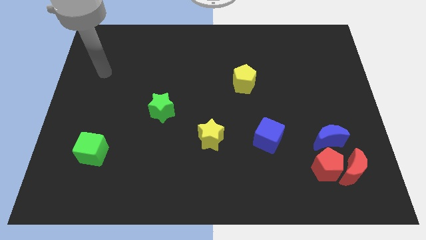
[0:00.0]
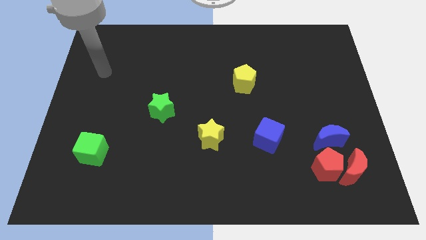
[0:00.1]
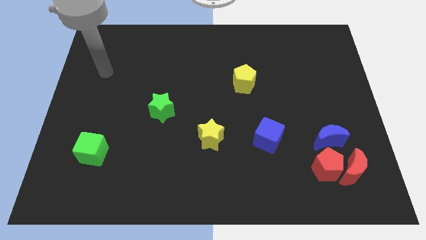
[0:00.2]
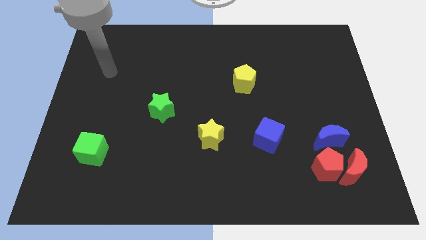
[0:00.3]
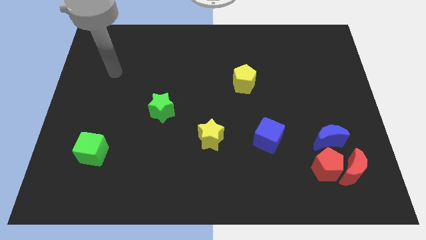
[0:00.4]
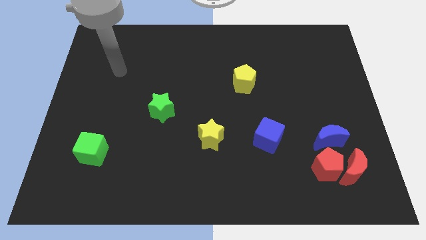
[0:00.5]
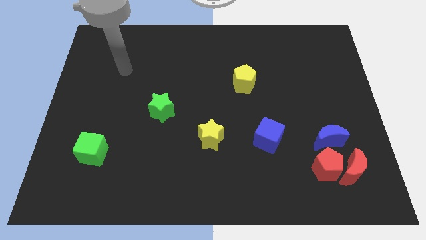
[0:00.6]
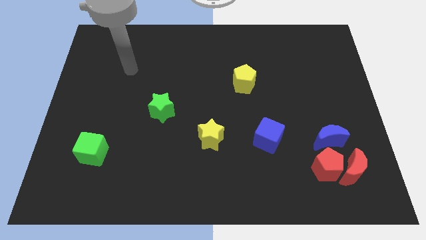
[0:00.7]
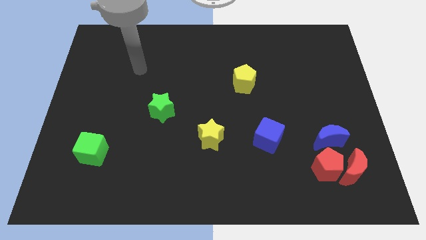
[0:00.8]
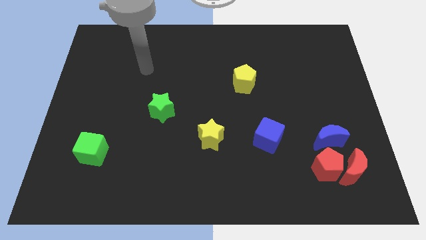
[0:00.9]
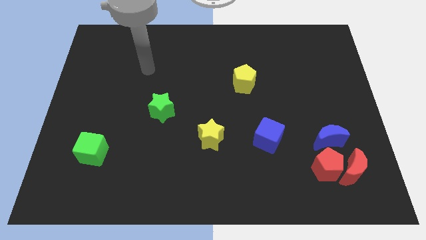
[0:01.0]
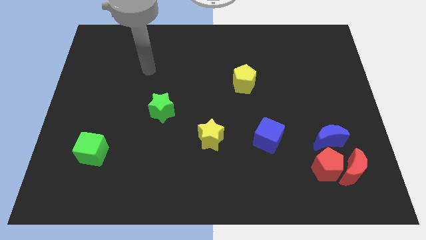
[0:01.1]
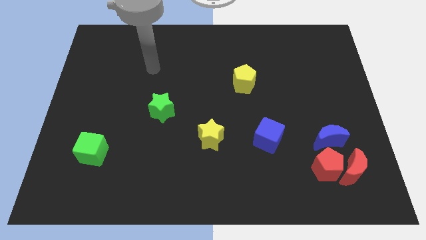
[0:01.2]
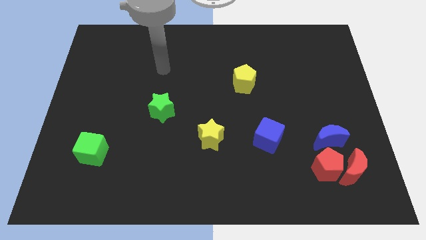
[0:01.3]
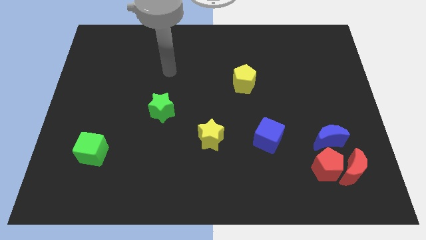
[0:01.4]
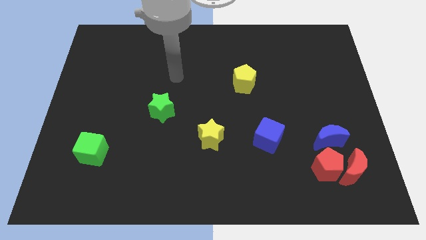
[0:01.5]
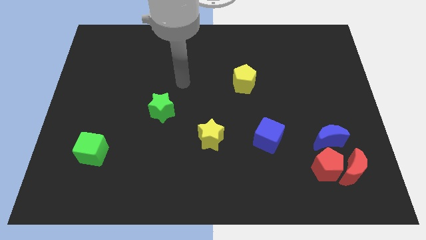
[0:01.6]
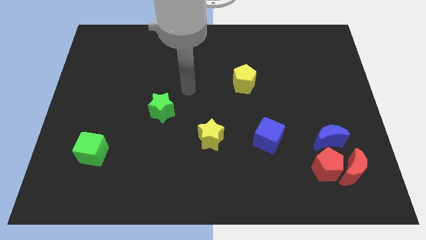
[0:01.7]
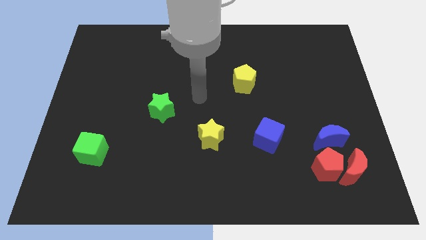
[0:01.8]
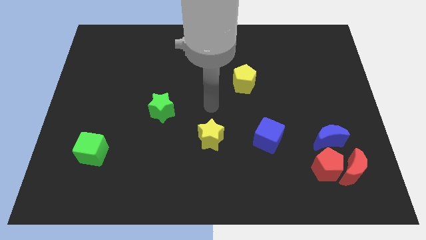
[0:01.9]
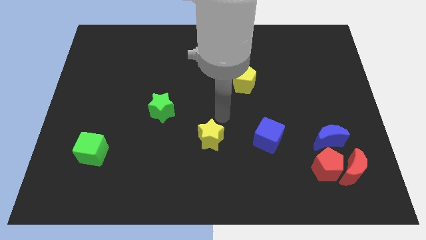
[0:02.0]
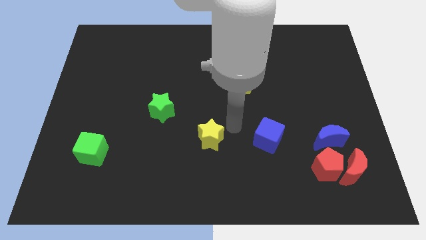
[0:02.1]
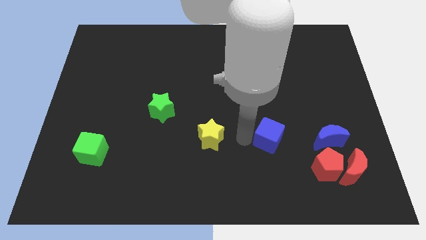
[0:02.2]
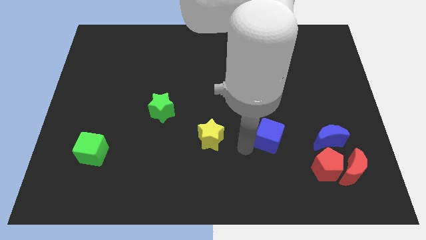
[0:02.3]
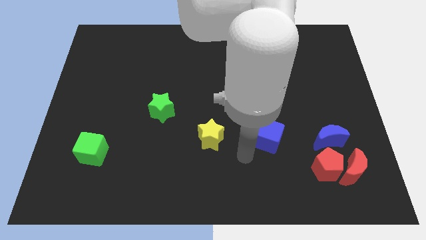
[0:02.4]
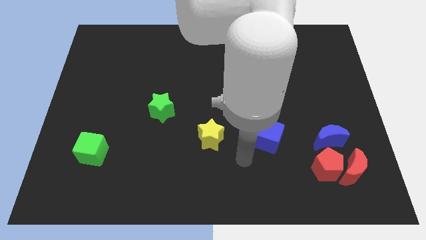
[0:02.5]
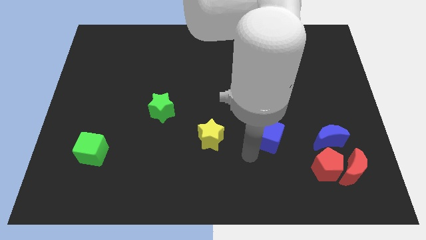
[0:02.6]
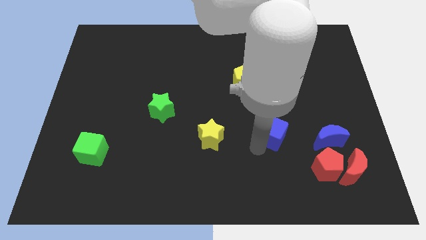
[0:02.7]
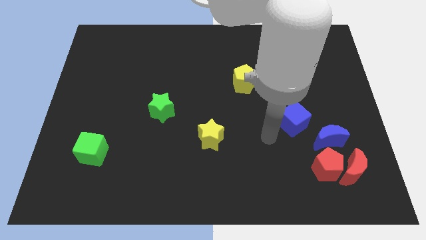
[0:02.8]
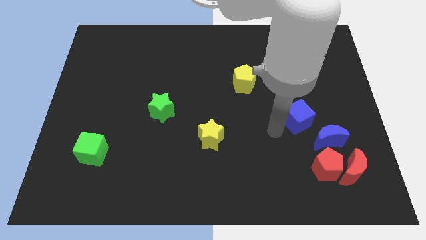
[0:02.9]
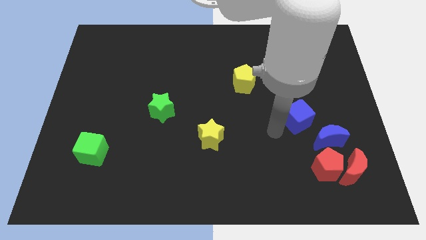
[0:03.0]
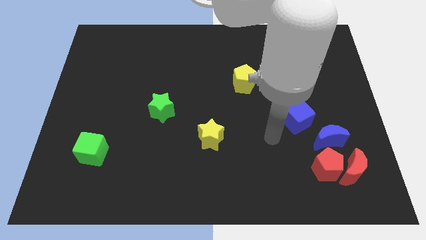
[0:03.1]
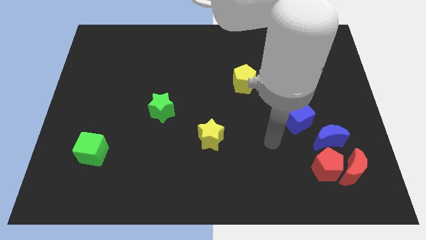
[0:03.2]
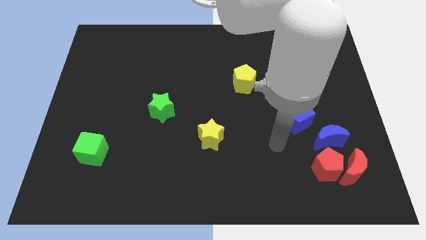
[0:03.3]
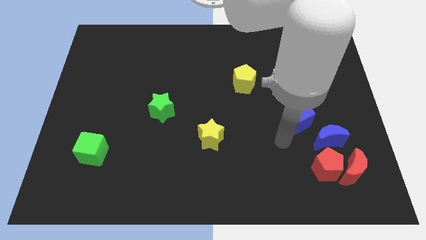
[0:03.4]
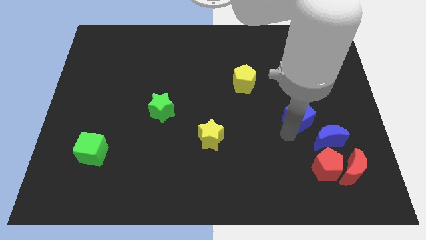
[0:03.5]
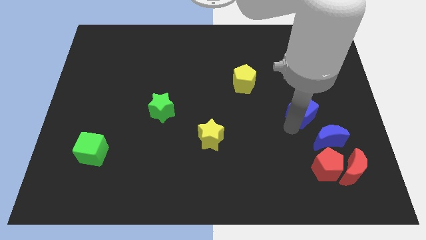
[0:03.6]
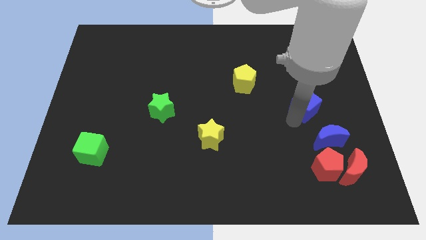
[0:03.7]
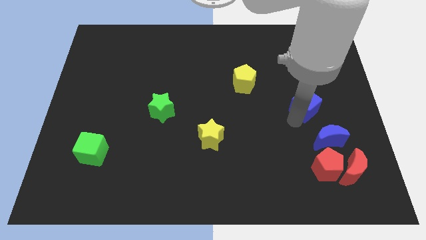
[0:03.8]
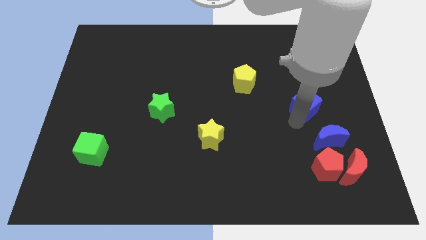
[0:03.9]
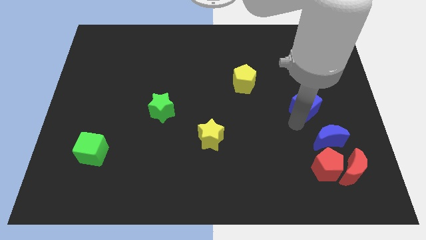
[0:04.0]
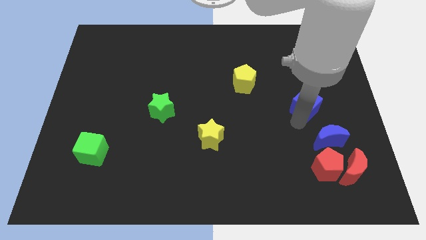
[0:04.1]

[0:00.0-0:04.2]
push the blue cube to the right of the green star

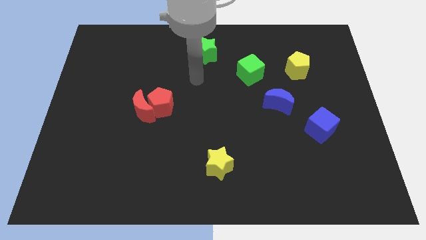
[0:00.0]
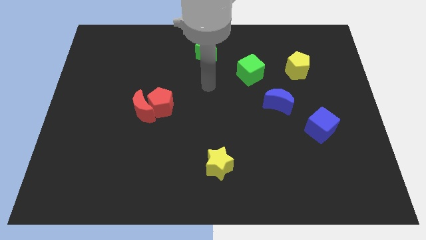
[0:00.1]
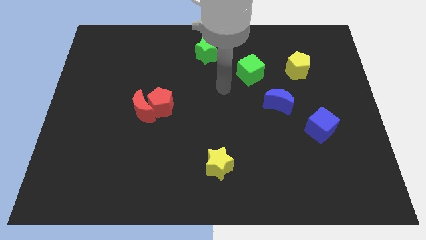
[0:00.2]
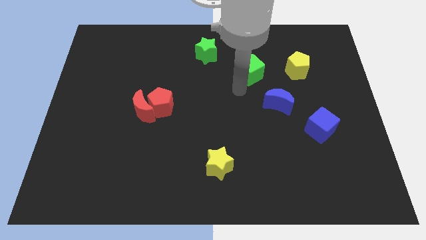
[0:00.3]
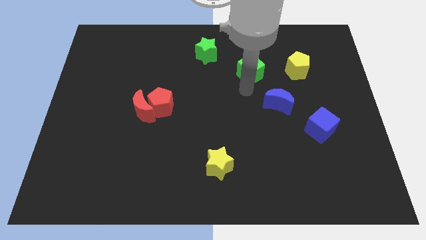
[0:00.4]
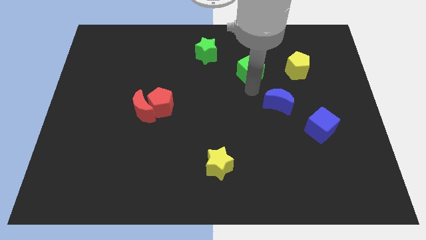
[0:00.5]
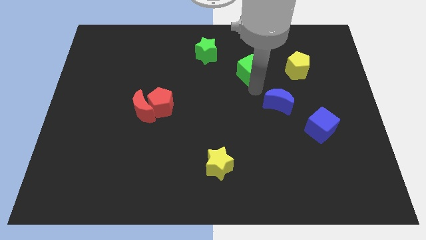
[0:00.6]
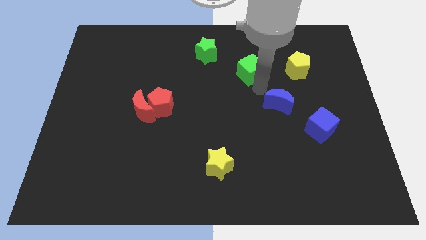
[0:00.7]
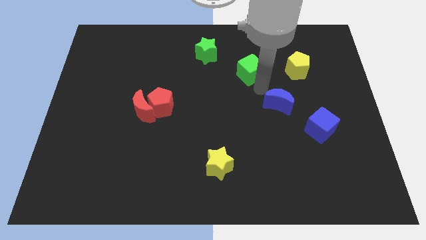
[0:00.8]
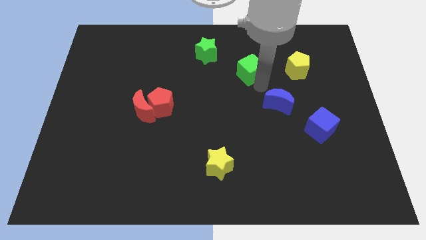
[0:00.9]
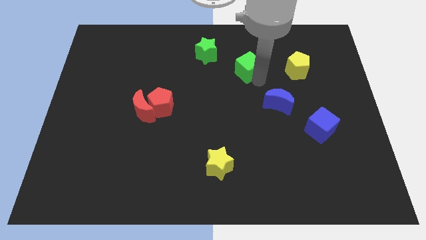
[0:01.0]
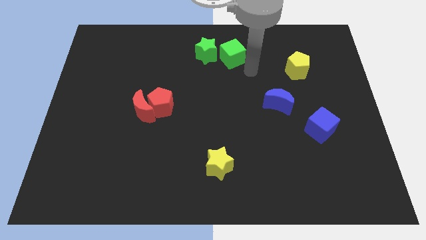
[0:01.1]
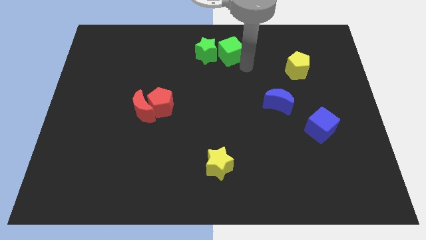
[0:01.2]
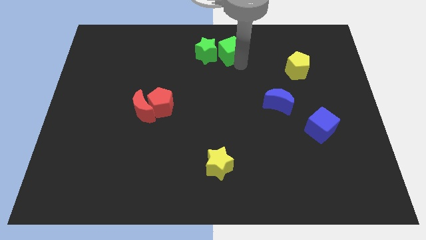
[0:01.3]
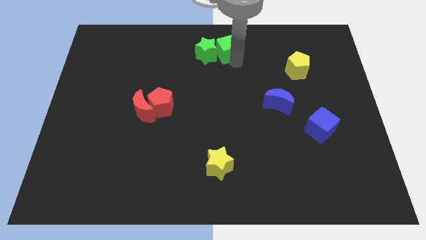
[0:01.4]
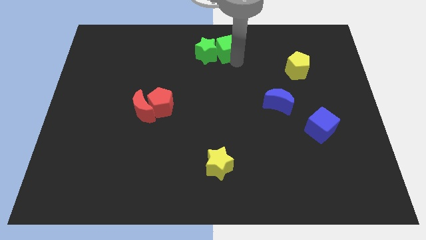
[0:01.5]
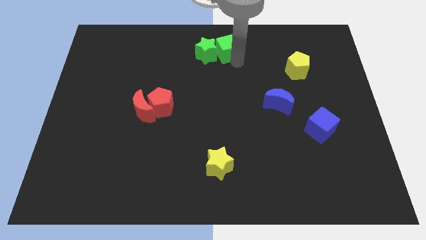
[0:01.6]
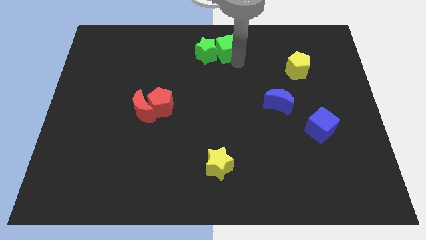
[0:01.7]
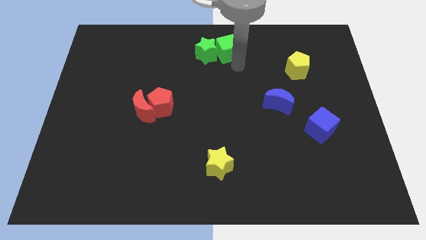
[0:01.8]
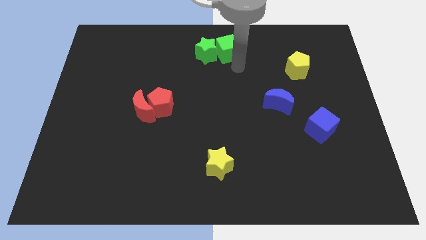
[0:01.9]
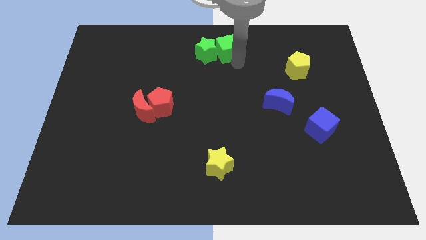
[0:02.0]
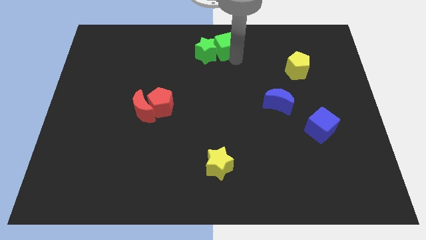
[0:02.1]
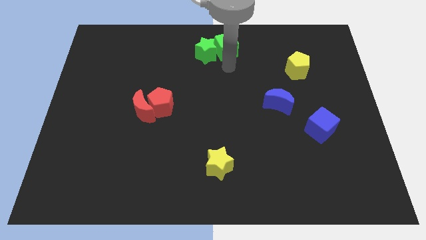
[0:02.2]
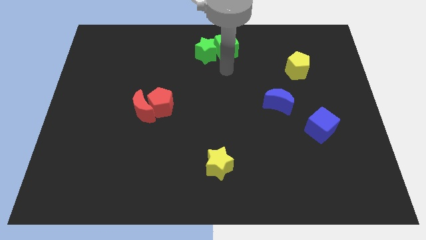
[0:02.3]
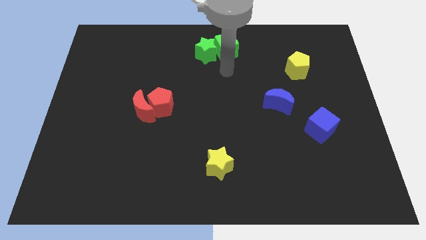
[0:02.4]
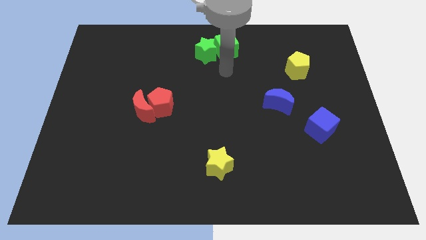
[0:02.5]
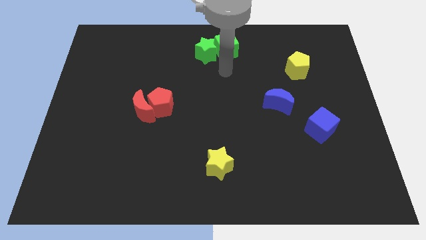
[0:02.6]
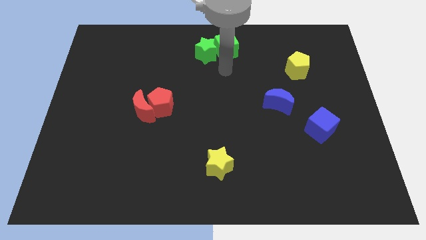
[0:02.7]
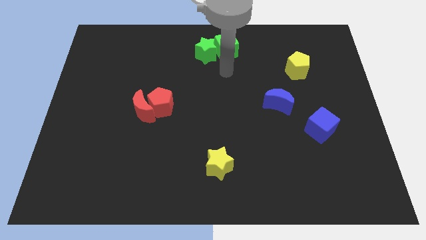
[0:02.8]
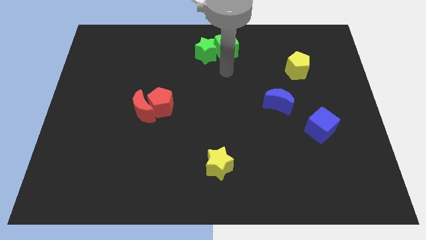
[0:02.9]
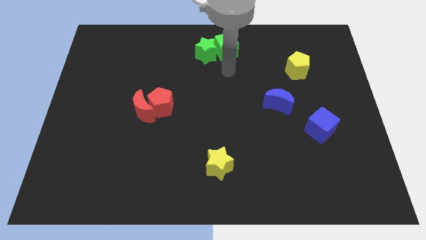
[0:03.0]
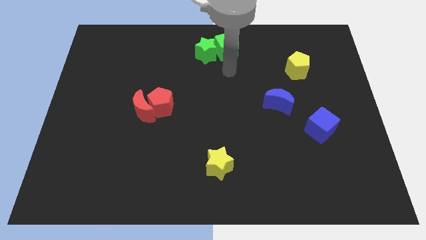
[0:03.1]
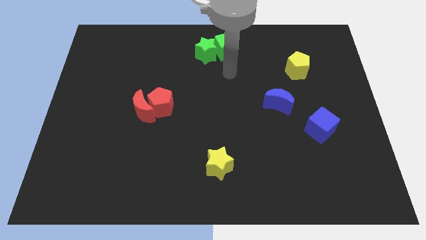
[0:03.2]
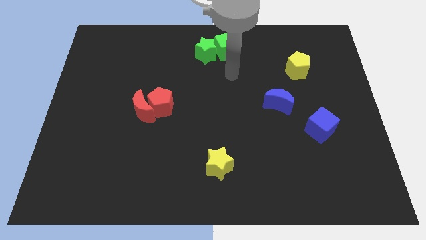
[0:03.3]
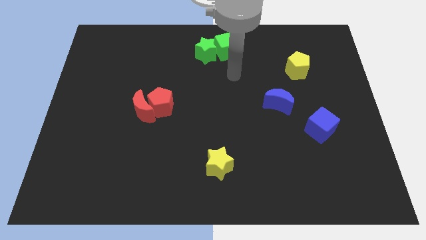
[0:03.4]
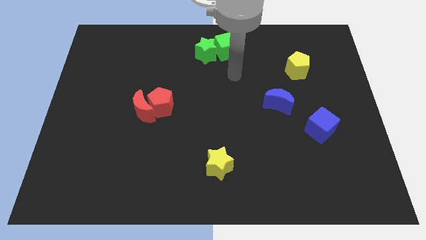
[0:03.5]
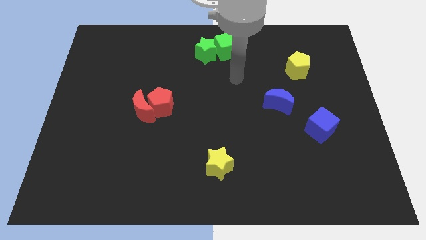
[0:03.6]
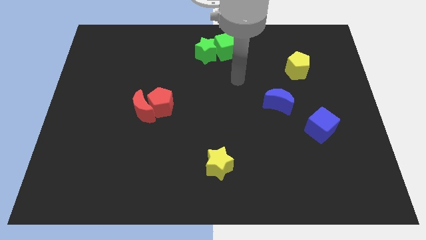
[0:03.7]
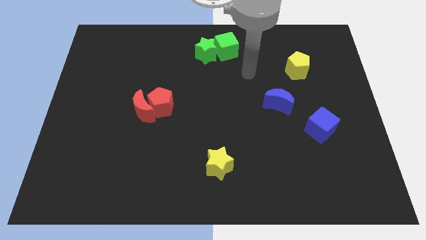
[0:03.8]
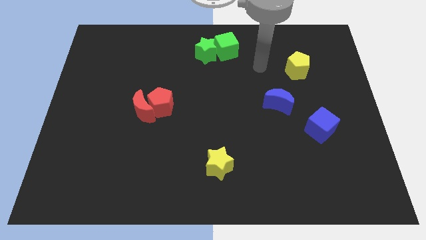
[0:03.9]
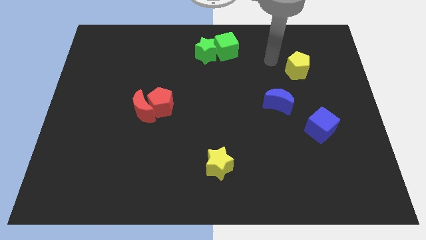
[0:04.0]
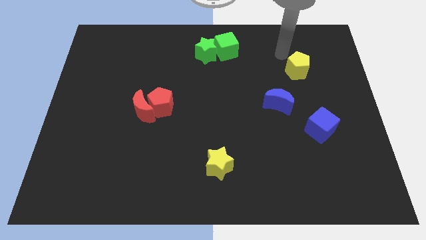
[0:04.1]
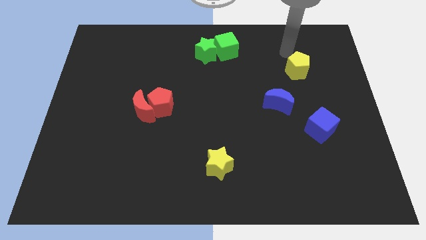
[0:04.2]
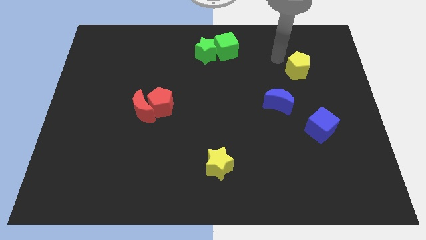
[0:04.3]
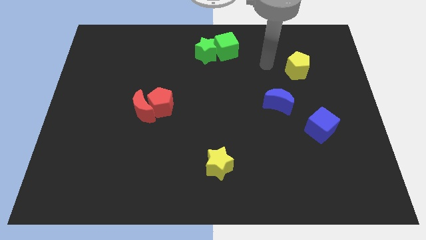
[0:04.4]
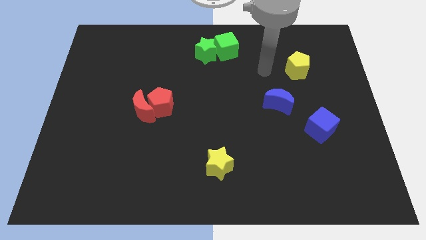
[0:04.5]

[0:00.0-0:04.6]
move the green cube to the left of the green star

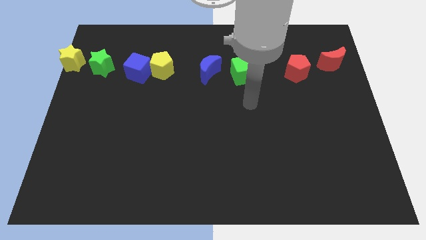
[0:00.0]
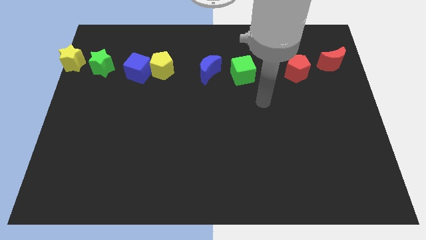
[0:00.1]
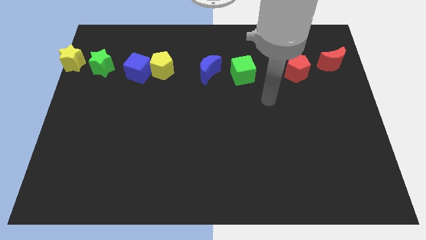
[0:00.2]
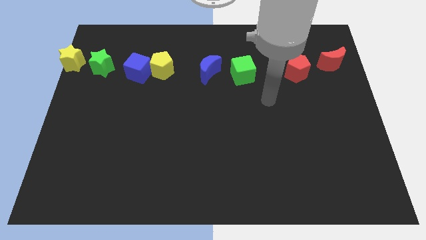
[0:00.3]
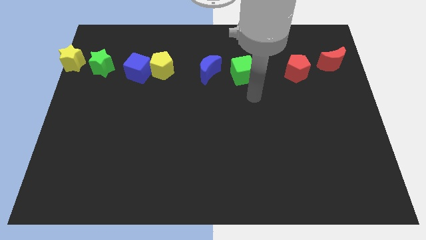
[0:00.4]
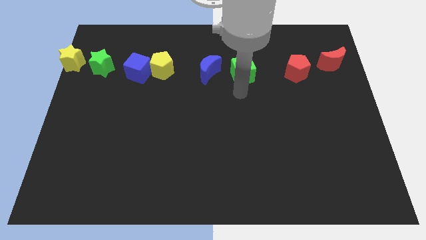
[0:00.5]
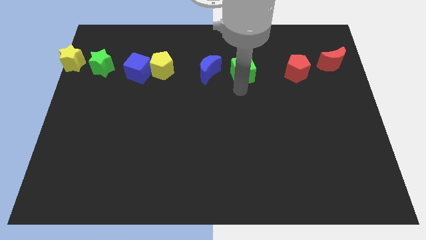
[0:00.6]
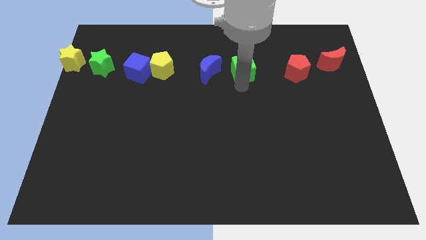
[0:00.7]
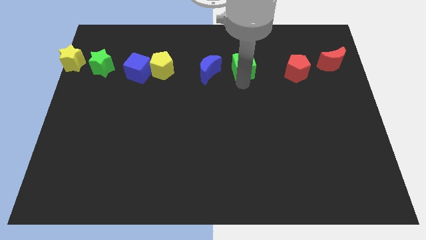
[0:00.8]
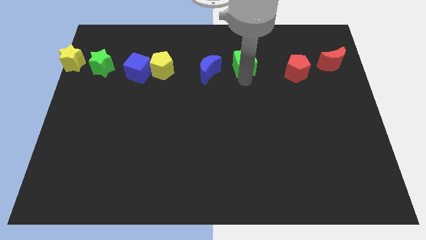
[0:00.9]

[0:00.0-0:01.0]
push the green cube slightly to the top
